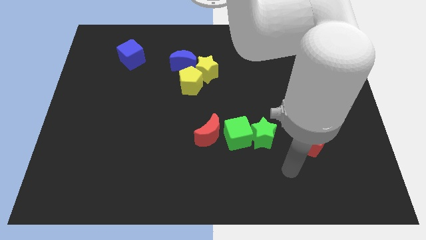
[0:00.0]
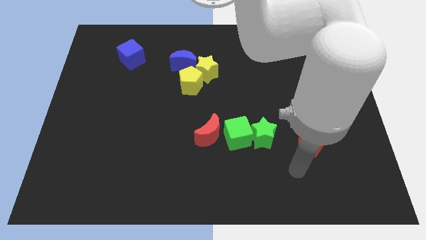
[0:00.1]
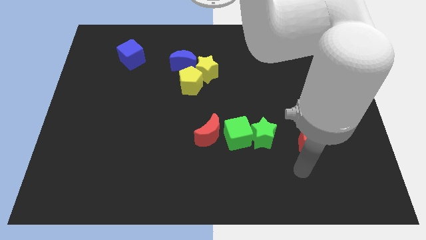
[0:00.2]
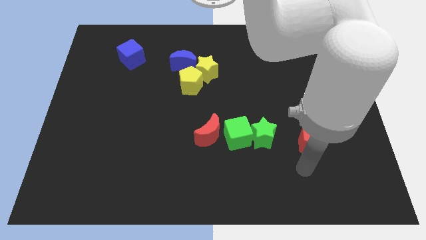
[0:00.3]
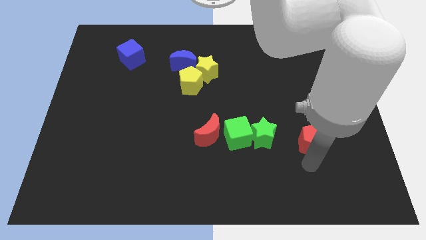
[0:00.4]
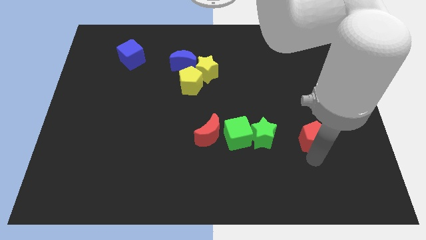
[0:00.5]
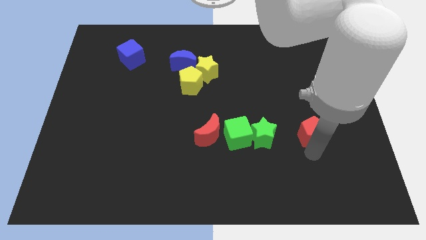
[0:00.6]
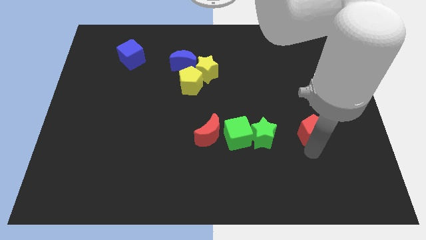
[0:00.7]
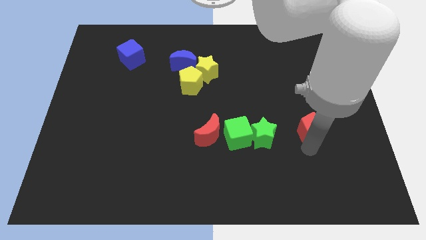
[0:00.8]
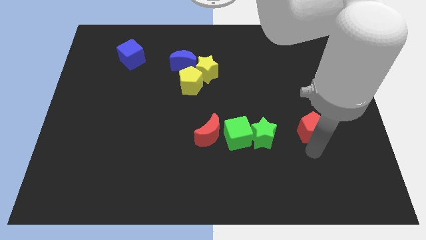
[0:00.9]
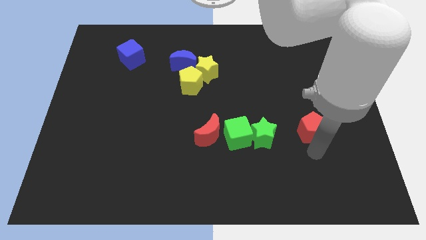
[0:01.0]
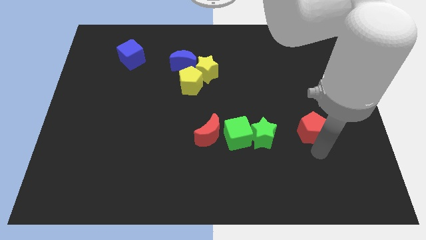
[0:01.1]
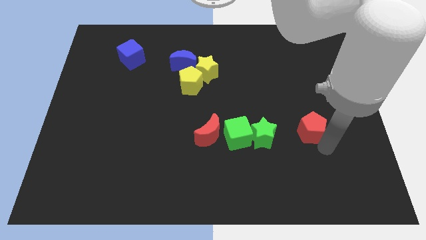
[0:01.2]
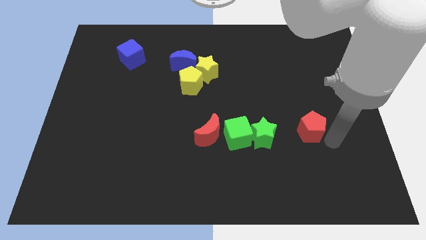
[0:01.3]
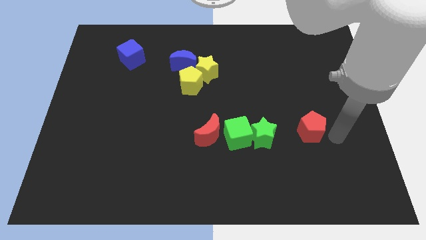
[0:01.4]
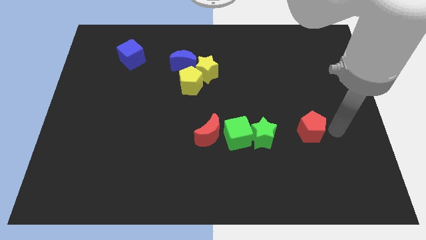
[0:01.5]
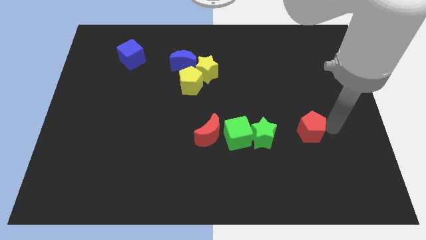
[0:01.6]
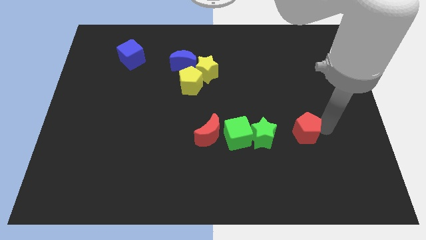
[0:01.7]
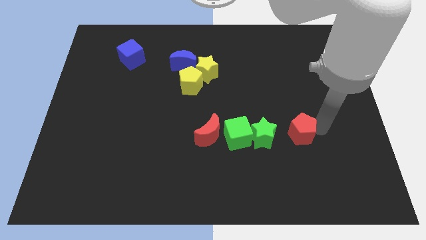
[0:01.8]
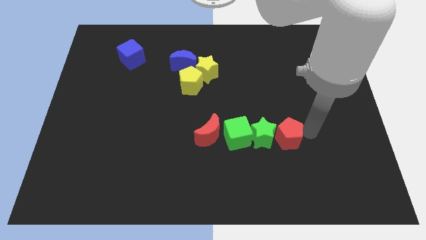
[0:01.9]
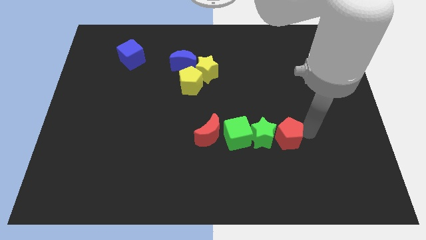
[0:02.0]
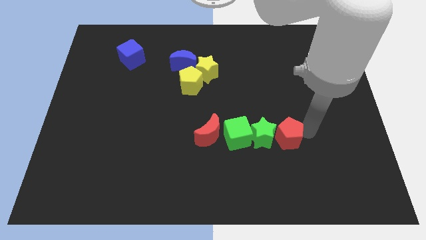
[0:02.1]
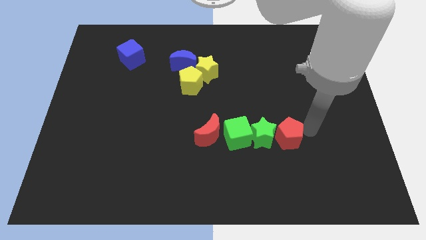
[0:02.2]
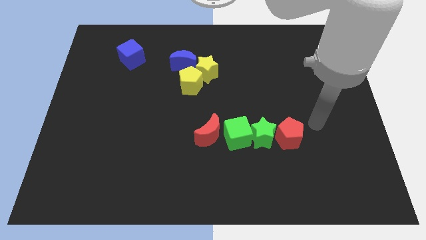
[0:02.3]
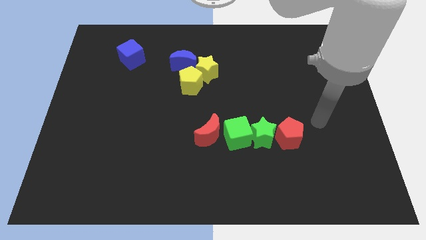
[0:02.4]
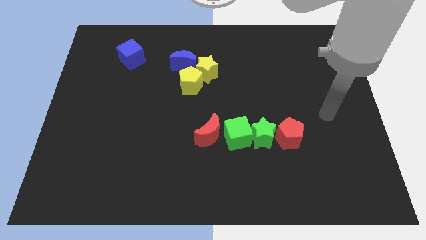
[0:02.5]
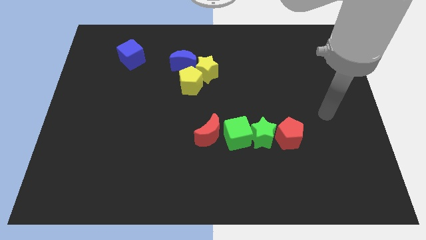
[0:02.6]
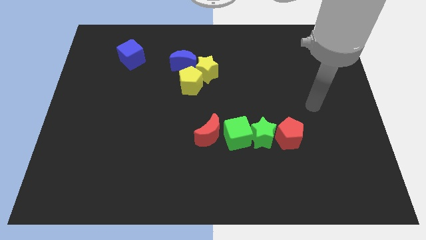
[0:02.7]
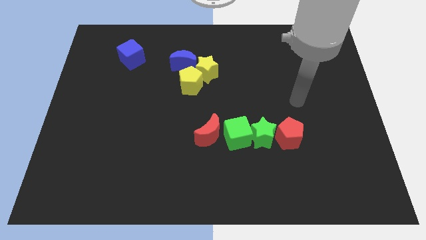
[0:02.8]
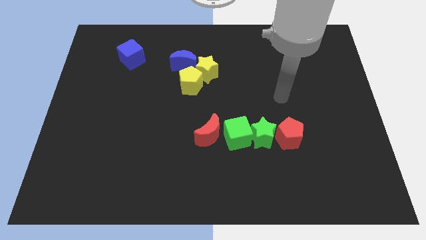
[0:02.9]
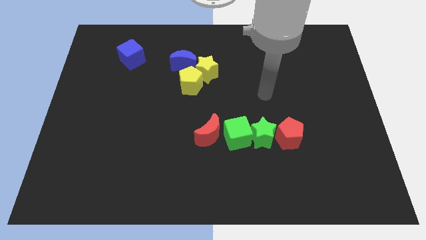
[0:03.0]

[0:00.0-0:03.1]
push the red pentagon into the green star

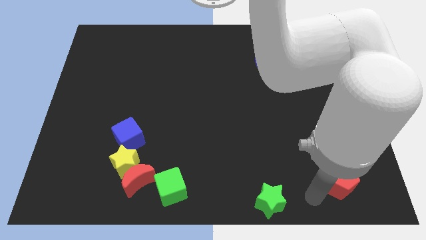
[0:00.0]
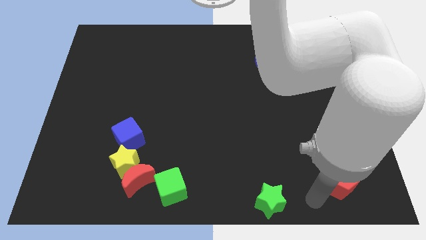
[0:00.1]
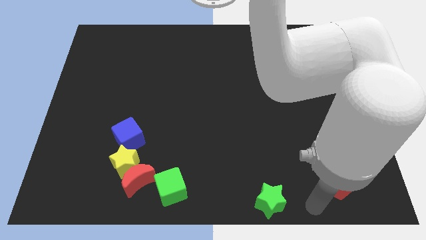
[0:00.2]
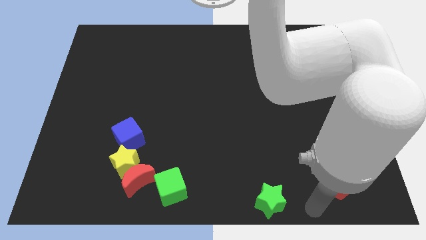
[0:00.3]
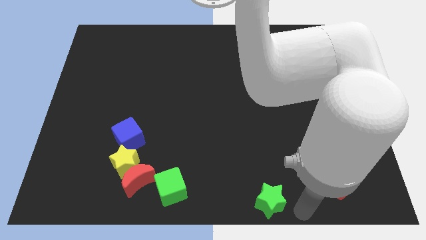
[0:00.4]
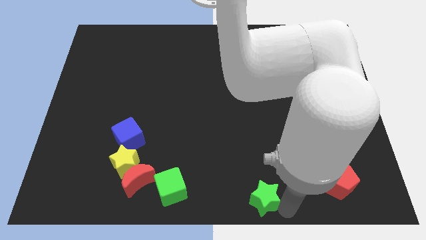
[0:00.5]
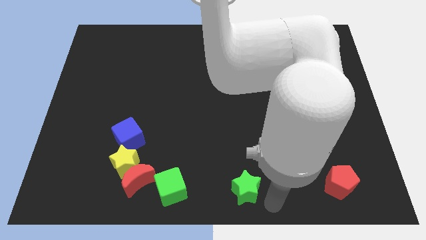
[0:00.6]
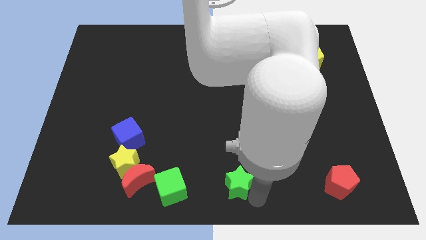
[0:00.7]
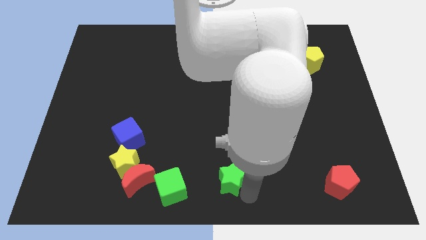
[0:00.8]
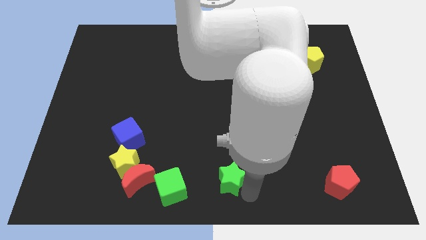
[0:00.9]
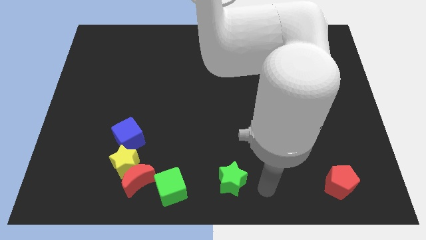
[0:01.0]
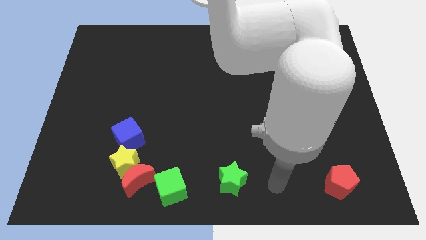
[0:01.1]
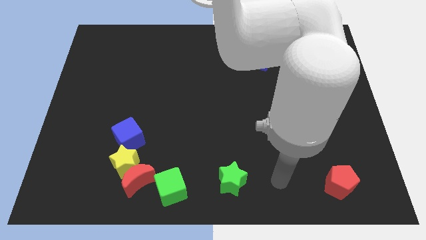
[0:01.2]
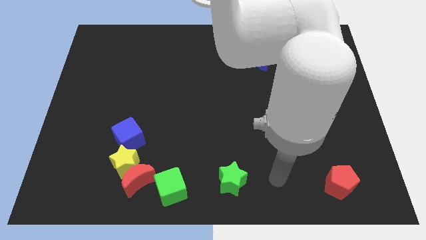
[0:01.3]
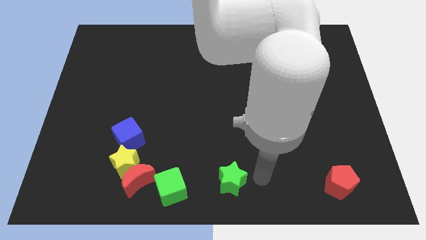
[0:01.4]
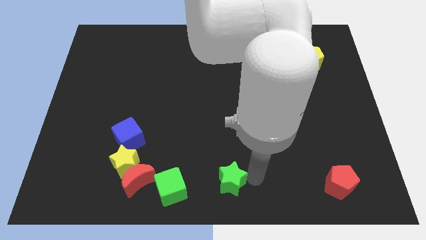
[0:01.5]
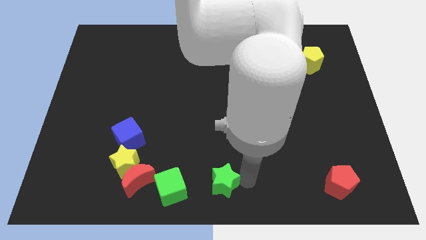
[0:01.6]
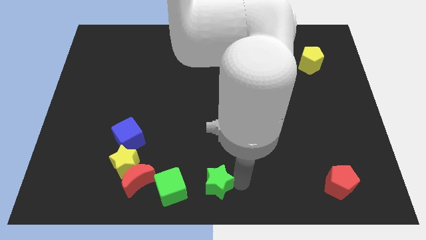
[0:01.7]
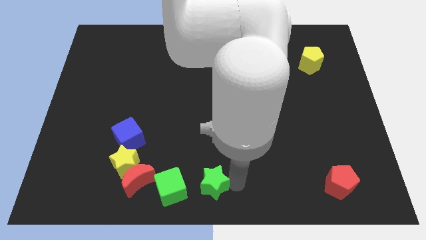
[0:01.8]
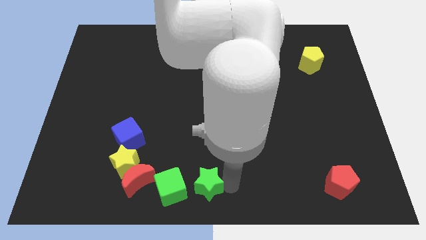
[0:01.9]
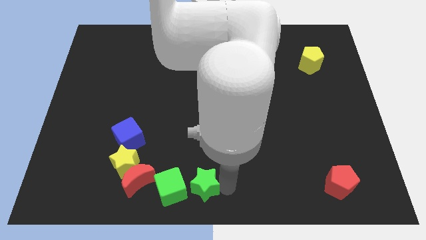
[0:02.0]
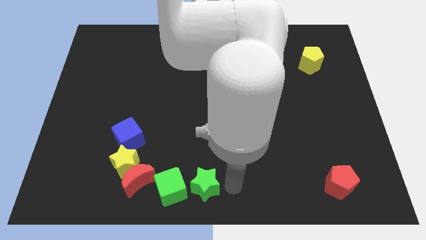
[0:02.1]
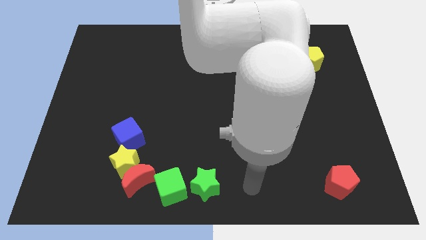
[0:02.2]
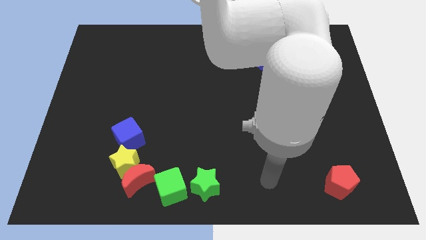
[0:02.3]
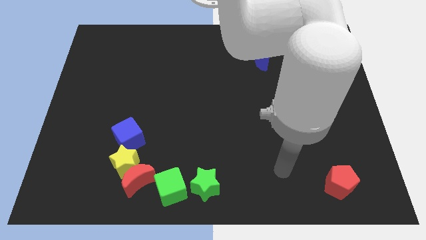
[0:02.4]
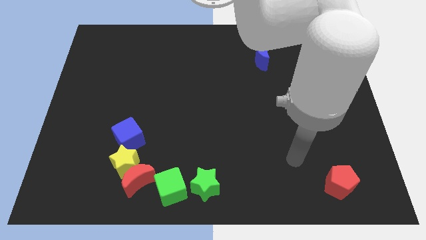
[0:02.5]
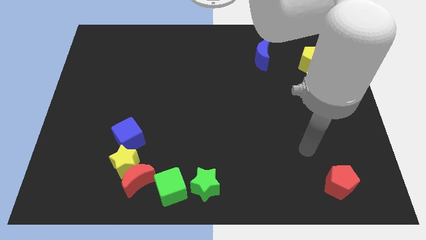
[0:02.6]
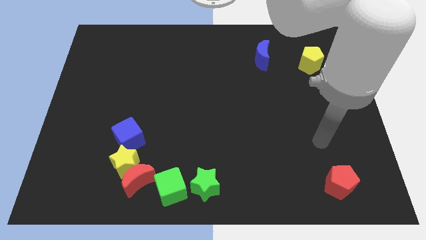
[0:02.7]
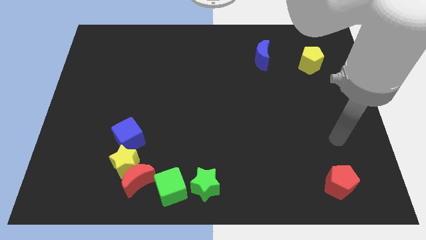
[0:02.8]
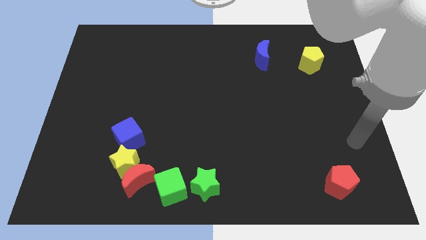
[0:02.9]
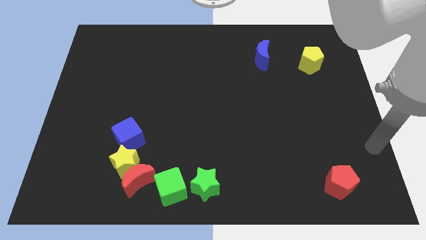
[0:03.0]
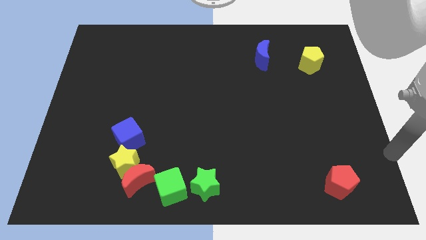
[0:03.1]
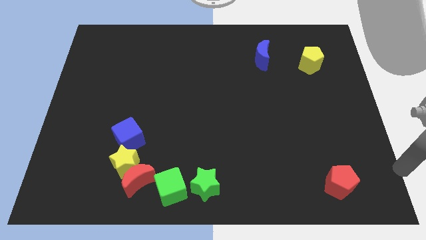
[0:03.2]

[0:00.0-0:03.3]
place the green star beside the green cube

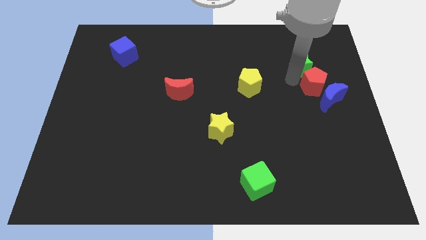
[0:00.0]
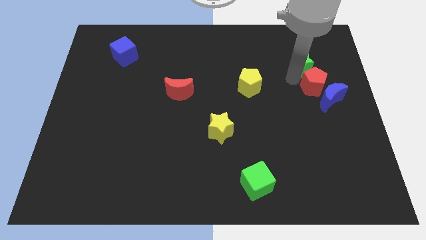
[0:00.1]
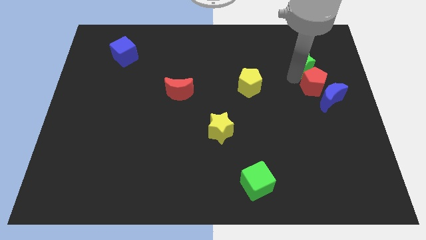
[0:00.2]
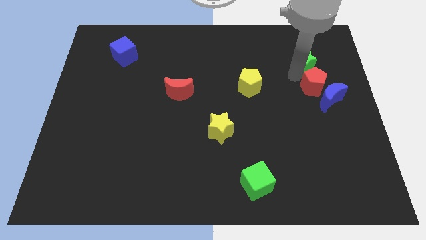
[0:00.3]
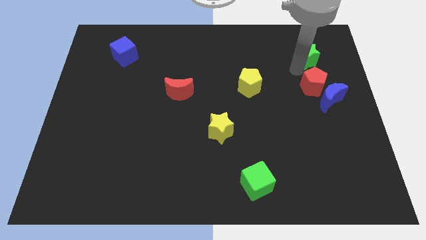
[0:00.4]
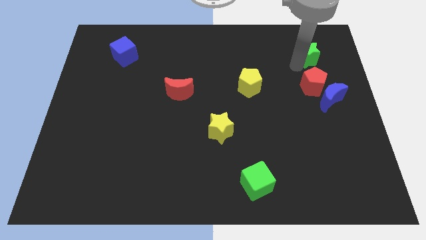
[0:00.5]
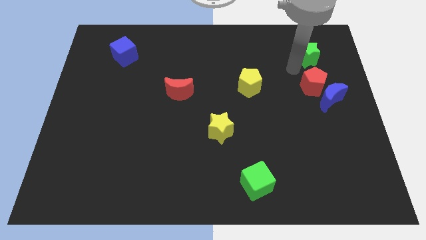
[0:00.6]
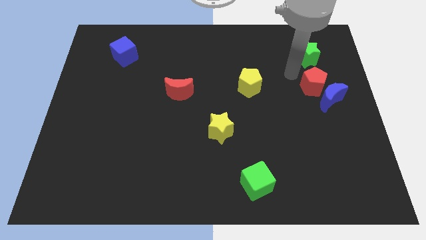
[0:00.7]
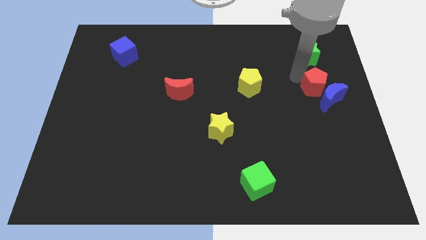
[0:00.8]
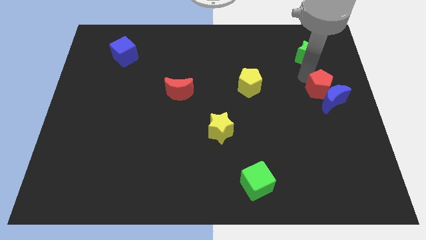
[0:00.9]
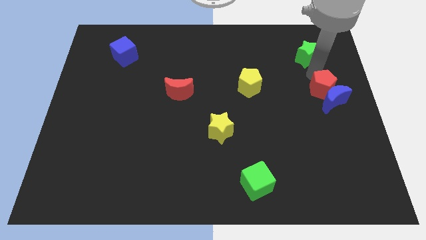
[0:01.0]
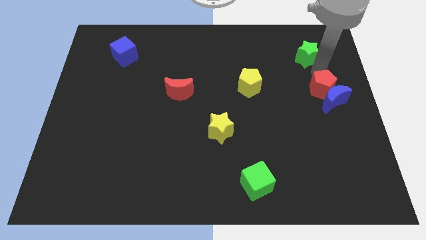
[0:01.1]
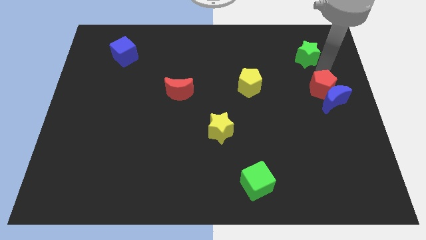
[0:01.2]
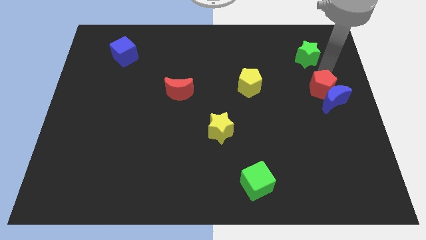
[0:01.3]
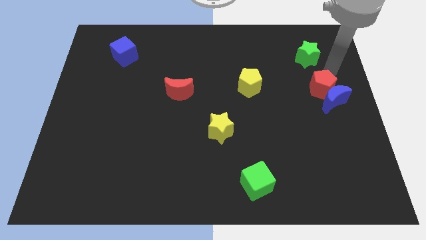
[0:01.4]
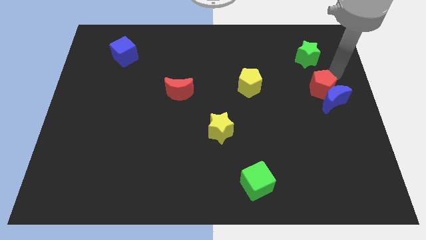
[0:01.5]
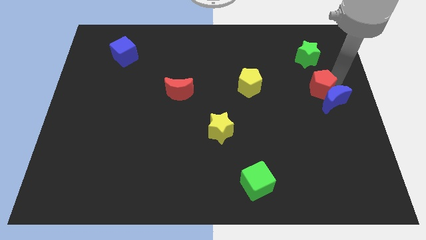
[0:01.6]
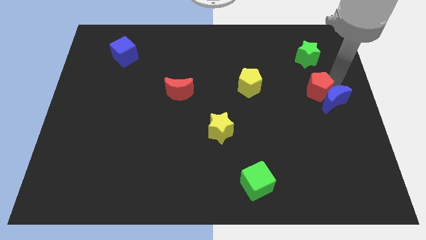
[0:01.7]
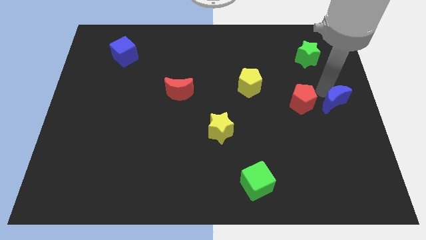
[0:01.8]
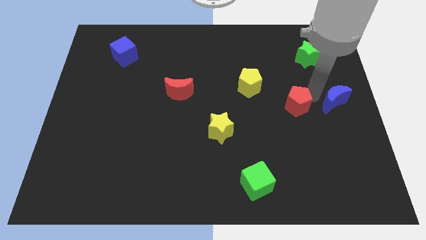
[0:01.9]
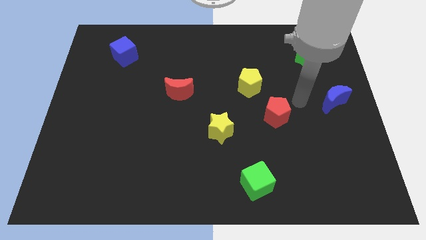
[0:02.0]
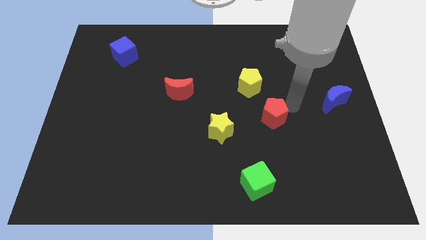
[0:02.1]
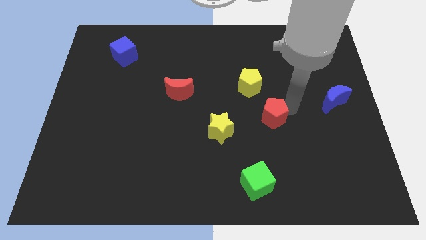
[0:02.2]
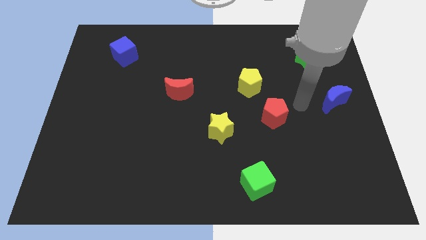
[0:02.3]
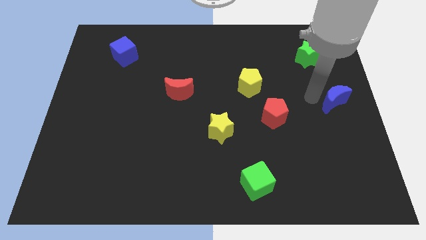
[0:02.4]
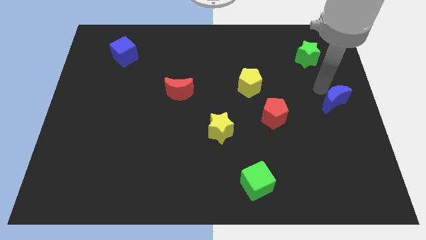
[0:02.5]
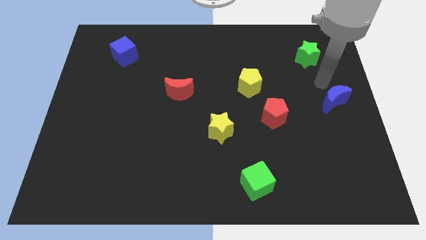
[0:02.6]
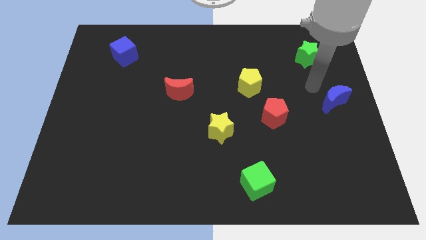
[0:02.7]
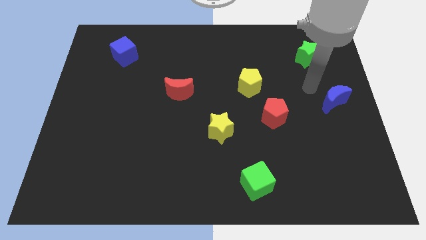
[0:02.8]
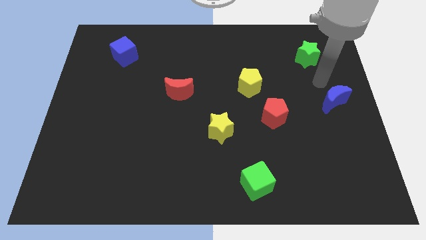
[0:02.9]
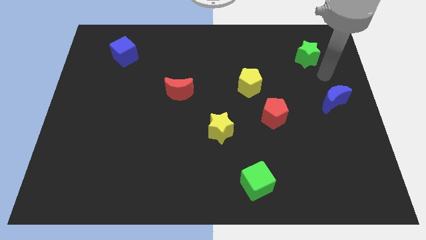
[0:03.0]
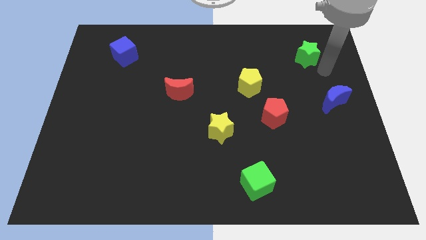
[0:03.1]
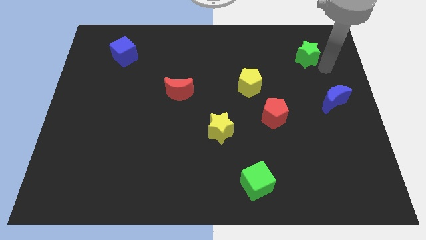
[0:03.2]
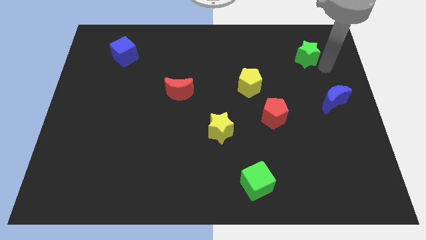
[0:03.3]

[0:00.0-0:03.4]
move the red pentagon to the bottom side of the yellow pe tagon
